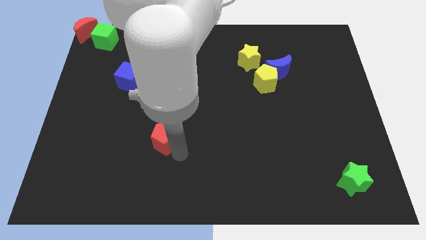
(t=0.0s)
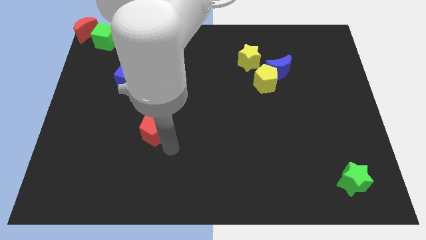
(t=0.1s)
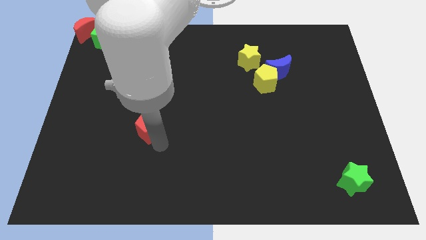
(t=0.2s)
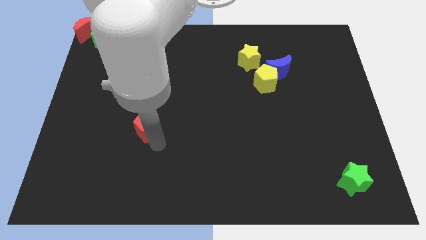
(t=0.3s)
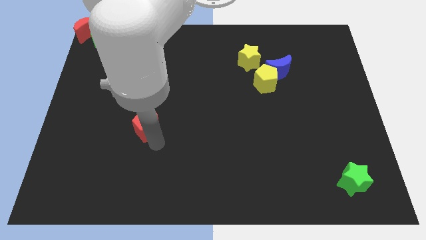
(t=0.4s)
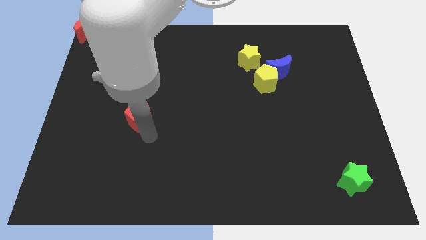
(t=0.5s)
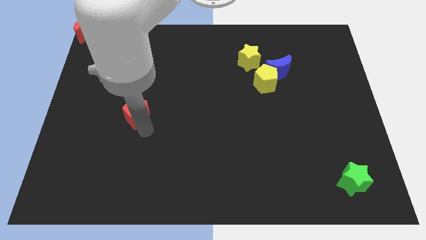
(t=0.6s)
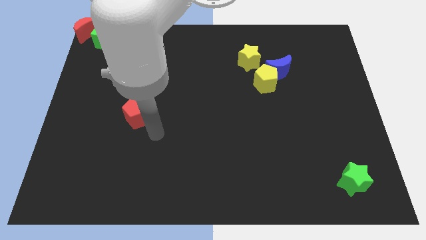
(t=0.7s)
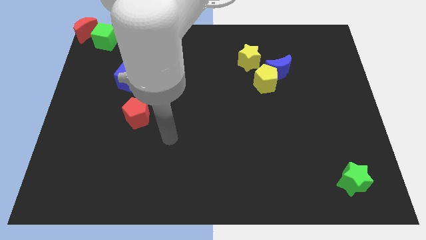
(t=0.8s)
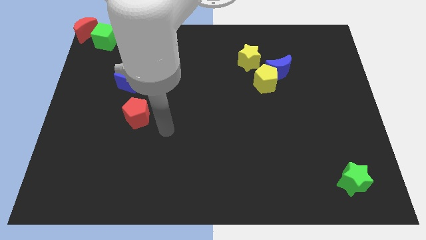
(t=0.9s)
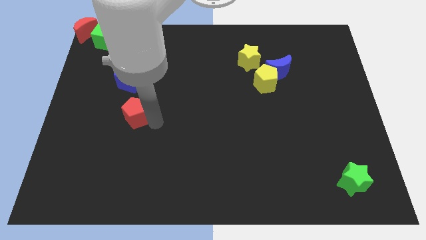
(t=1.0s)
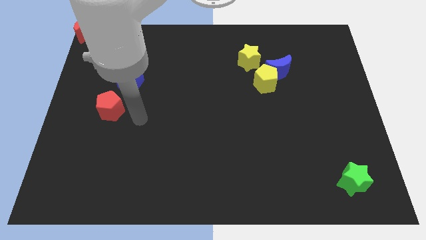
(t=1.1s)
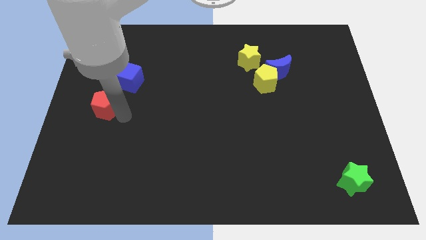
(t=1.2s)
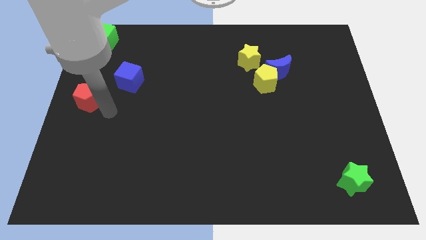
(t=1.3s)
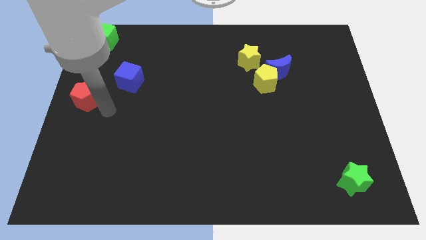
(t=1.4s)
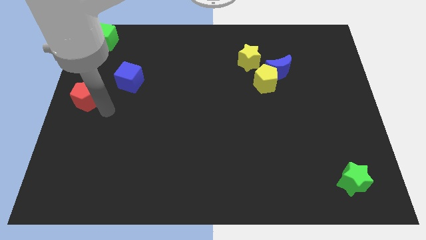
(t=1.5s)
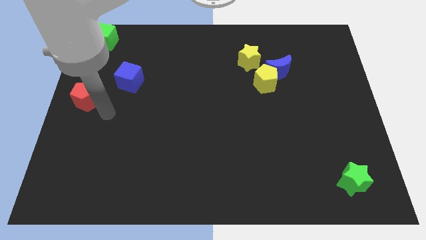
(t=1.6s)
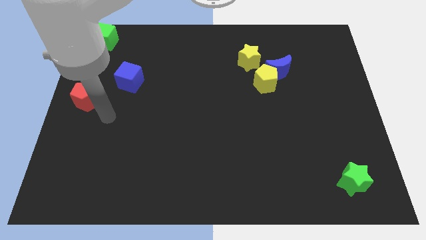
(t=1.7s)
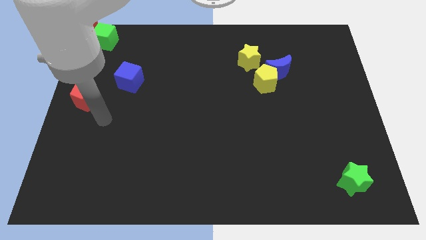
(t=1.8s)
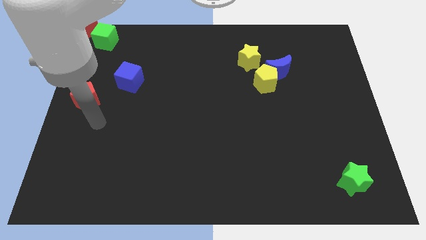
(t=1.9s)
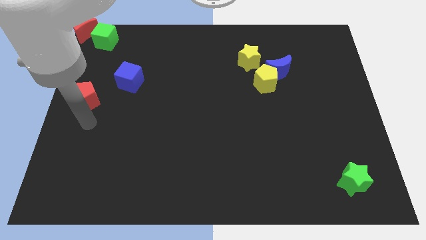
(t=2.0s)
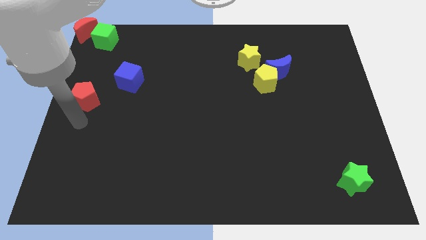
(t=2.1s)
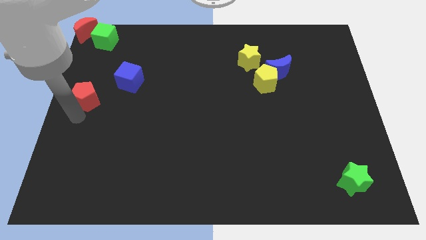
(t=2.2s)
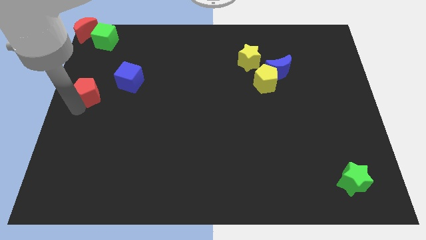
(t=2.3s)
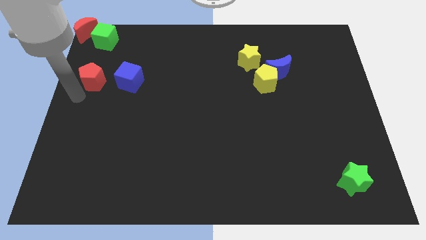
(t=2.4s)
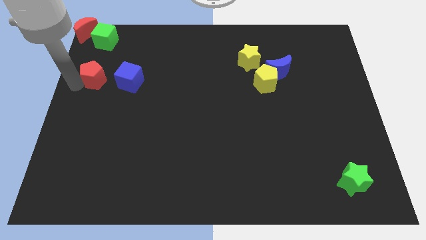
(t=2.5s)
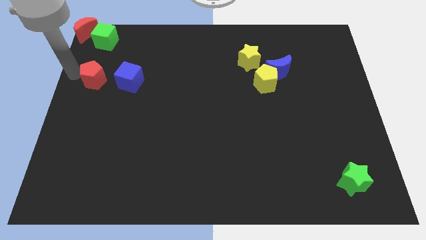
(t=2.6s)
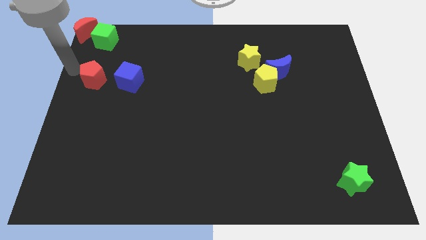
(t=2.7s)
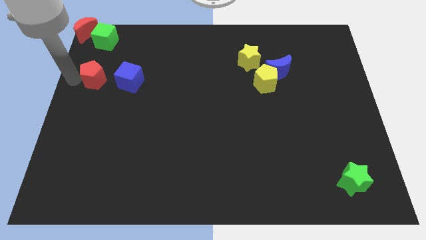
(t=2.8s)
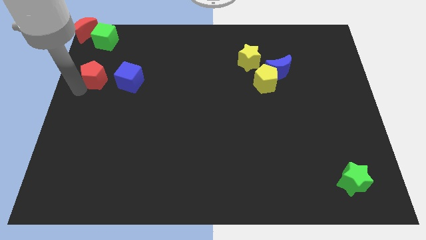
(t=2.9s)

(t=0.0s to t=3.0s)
put the red pentagon below the green cube

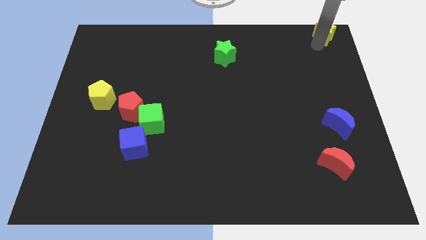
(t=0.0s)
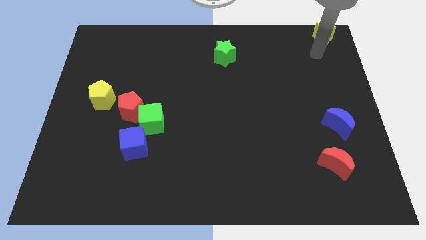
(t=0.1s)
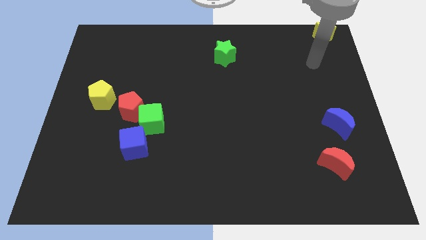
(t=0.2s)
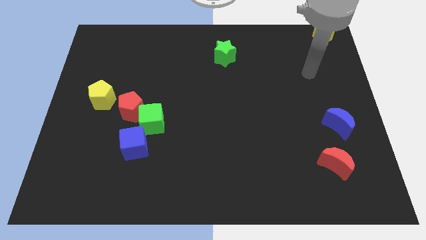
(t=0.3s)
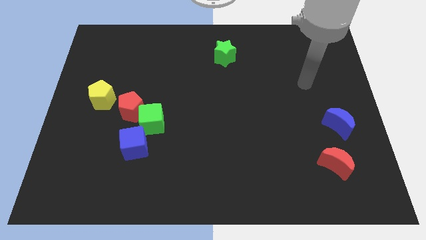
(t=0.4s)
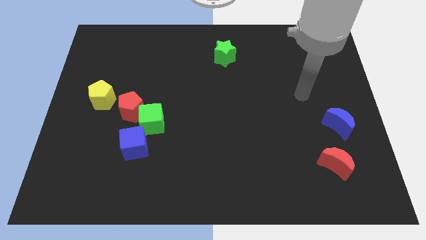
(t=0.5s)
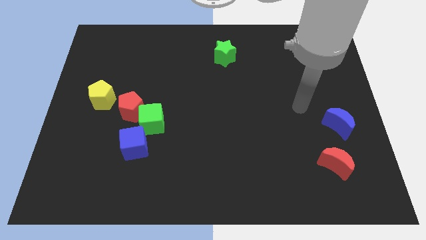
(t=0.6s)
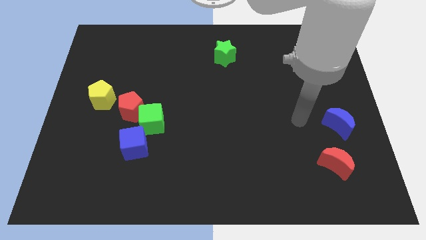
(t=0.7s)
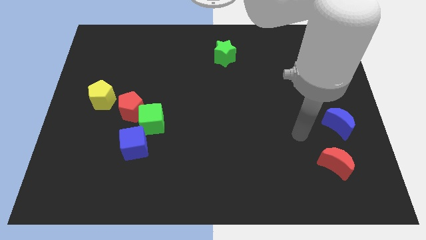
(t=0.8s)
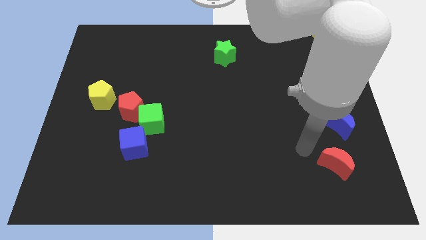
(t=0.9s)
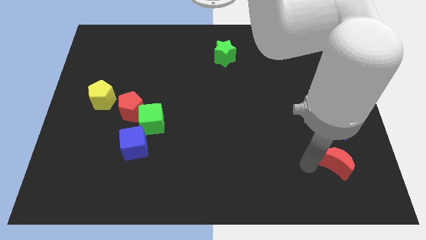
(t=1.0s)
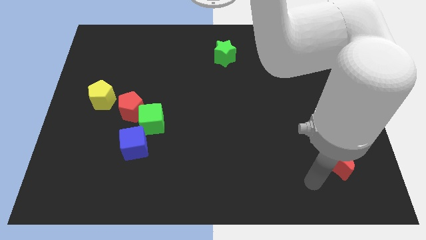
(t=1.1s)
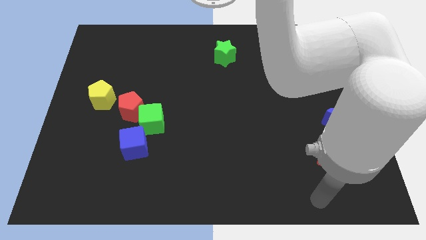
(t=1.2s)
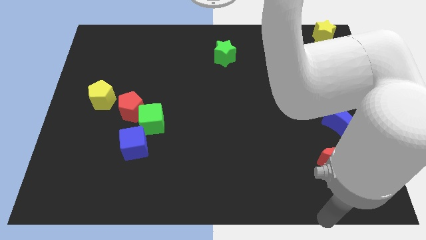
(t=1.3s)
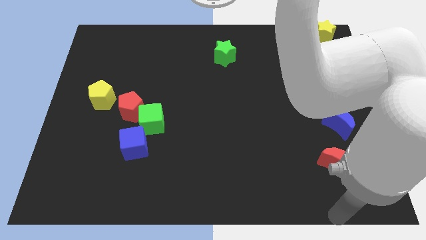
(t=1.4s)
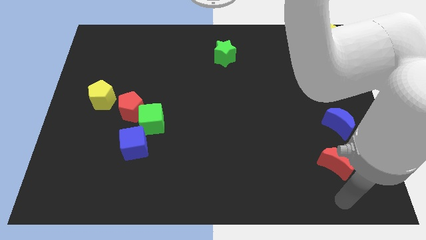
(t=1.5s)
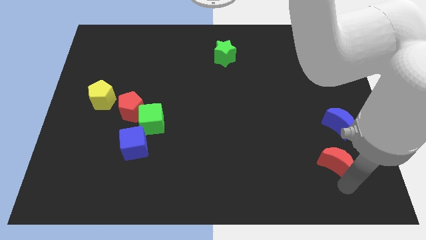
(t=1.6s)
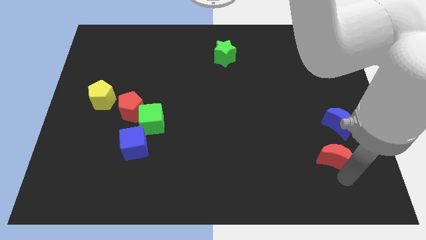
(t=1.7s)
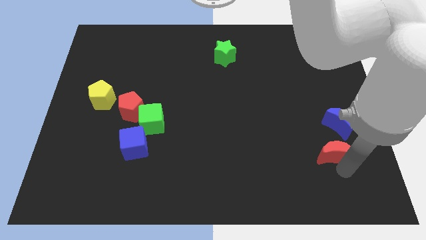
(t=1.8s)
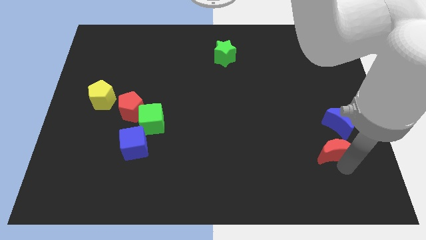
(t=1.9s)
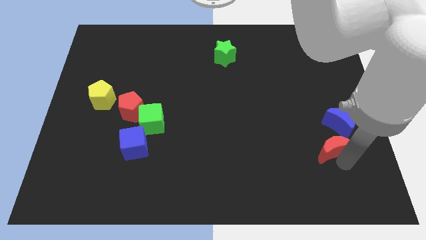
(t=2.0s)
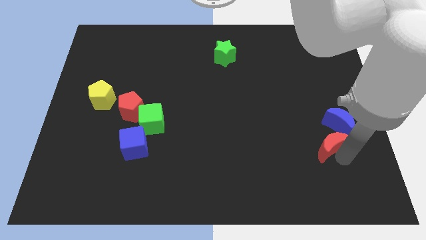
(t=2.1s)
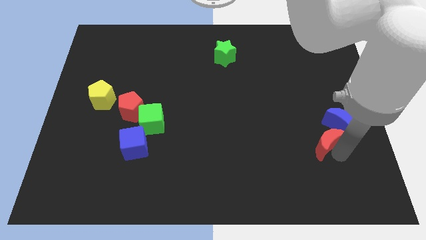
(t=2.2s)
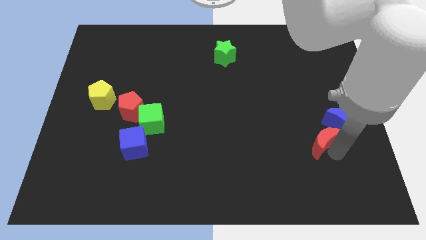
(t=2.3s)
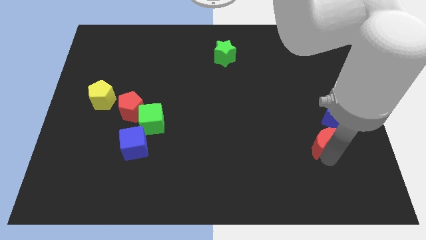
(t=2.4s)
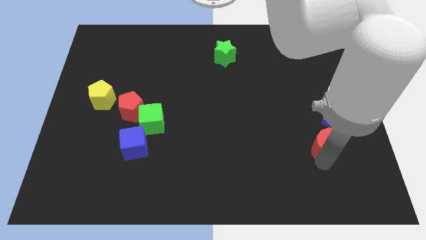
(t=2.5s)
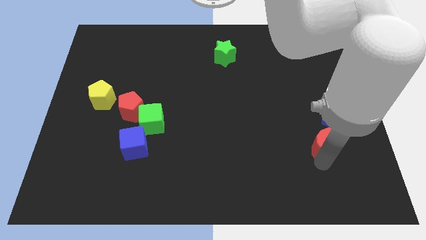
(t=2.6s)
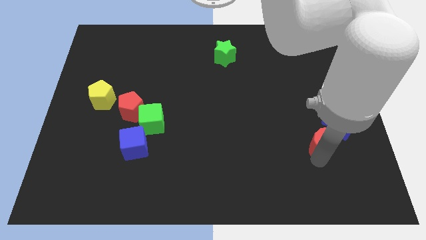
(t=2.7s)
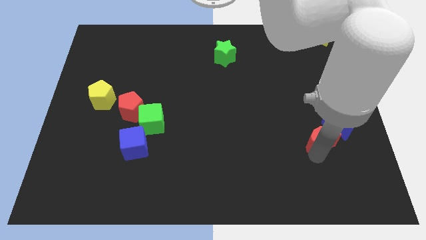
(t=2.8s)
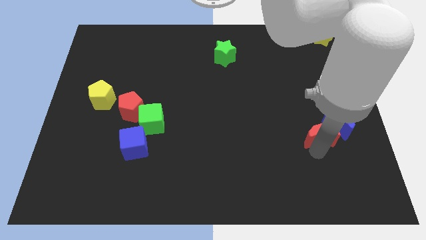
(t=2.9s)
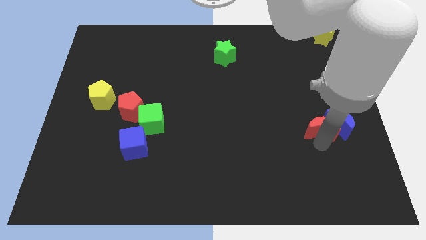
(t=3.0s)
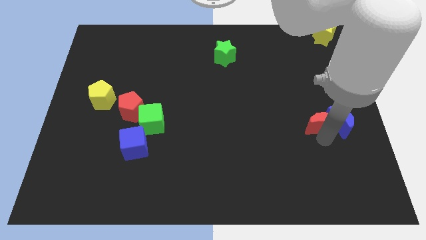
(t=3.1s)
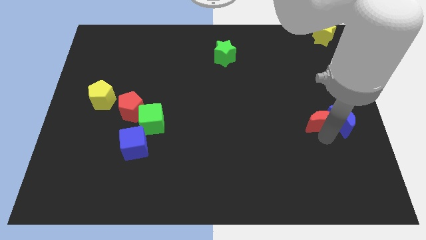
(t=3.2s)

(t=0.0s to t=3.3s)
move the red moon into the blue moon

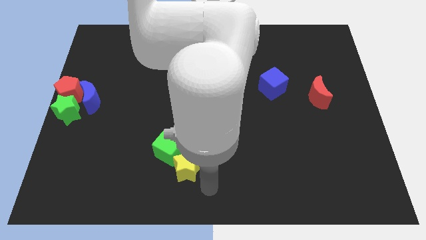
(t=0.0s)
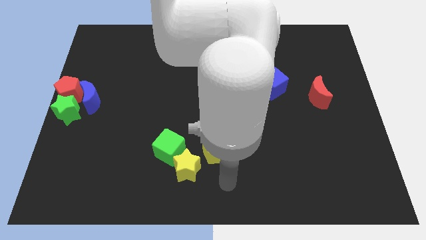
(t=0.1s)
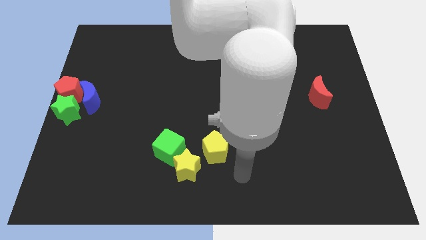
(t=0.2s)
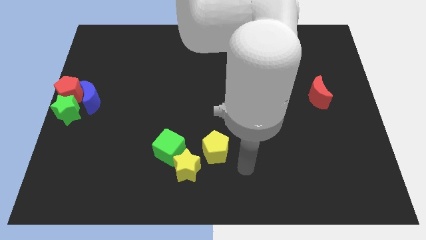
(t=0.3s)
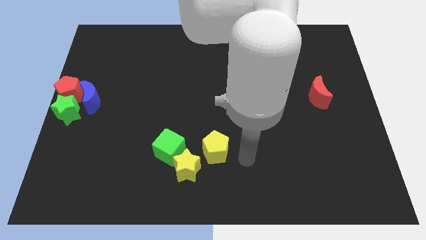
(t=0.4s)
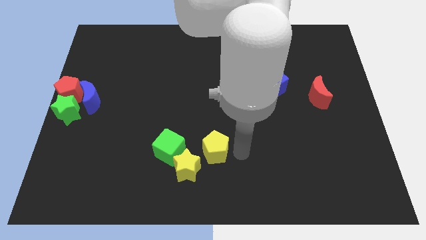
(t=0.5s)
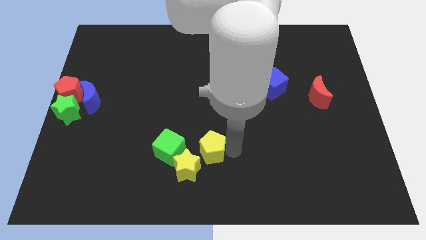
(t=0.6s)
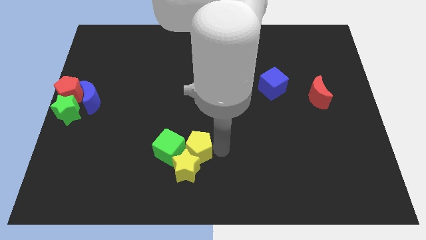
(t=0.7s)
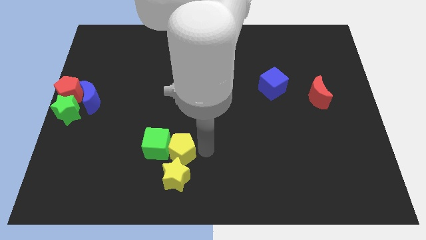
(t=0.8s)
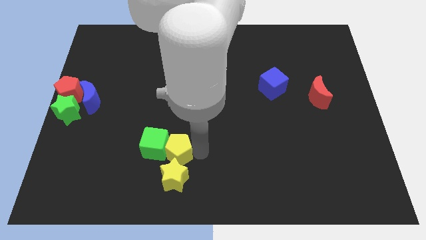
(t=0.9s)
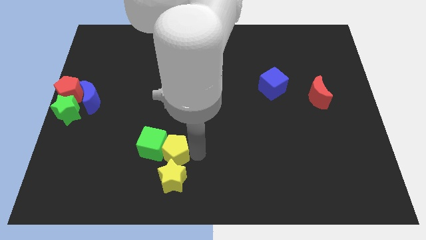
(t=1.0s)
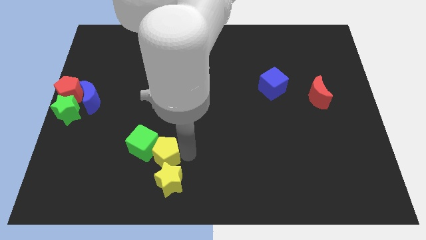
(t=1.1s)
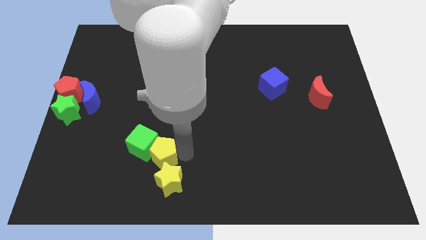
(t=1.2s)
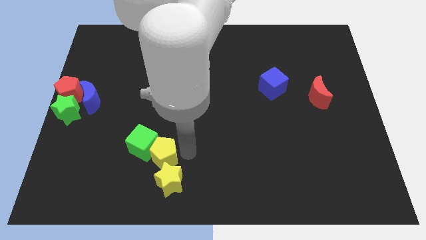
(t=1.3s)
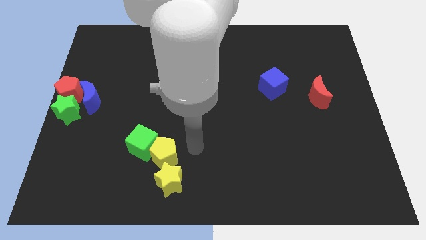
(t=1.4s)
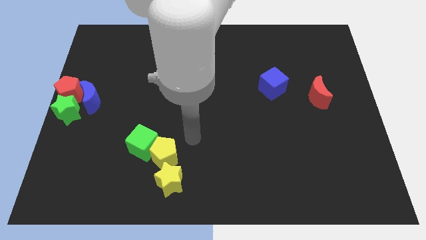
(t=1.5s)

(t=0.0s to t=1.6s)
move the yellow pentagon into the green cube

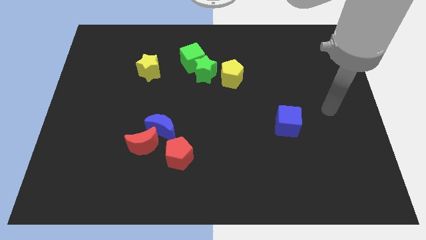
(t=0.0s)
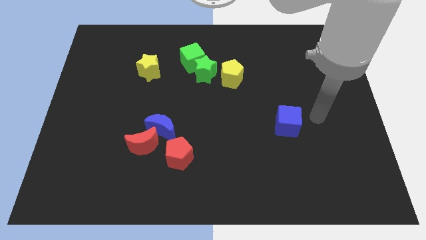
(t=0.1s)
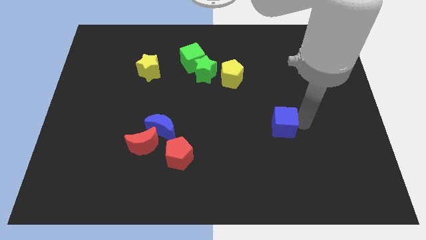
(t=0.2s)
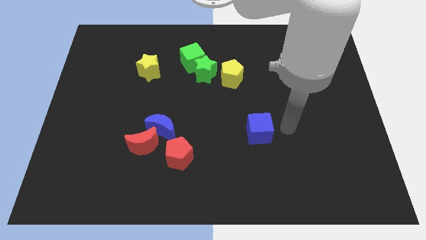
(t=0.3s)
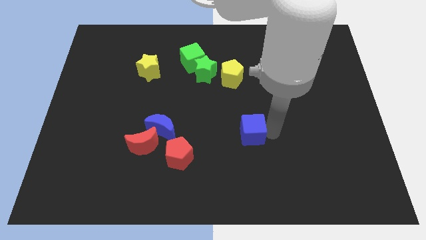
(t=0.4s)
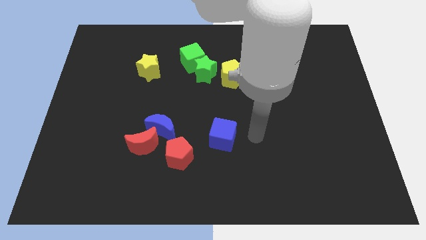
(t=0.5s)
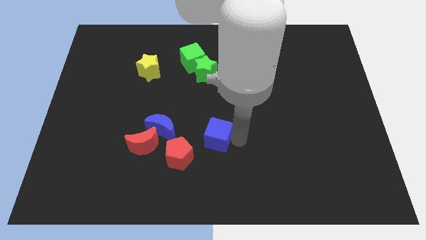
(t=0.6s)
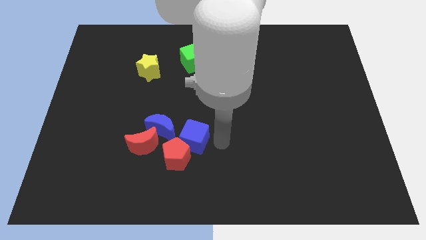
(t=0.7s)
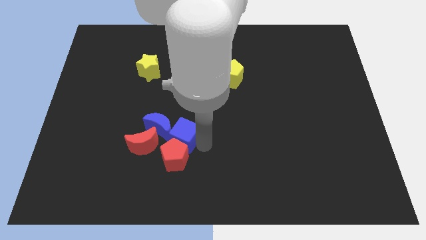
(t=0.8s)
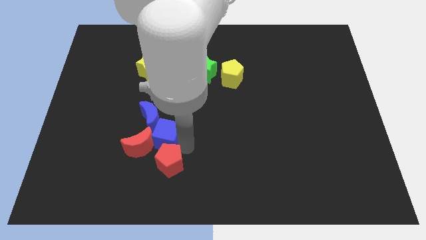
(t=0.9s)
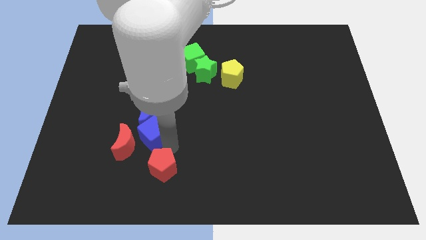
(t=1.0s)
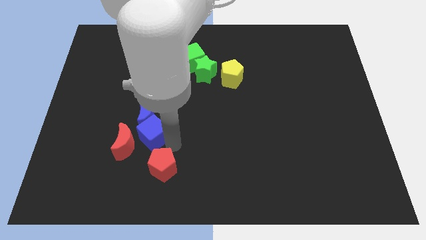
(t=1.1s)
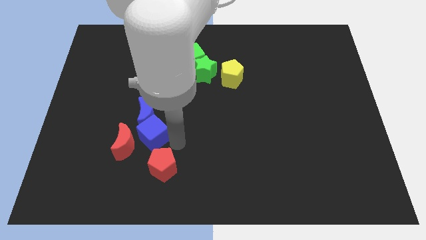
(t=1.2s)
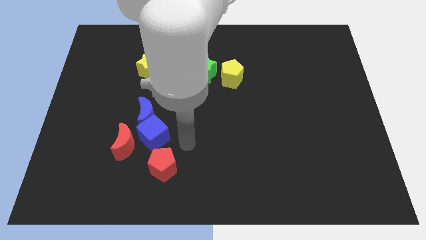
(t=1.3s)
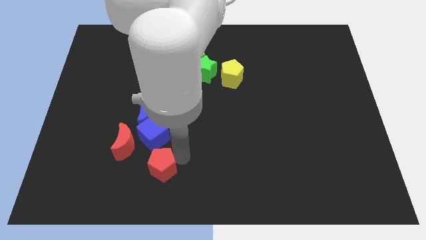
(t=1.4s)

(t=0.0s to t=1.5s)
move the blue cube towards the bottom of the blue crescent
